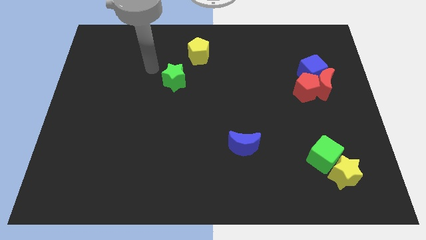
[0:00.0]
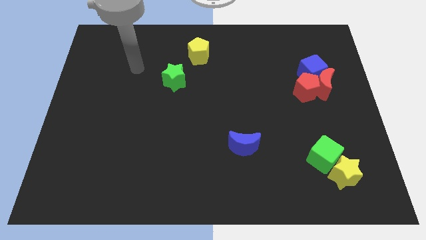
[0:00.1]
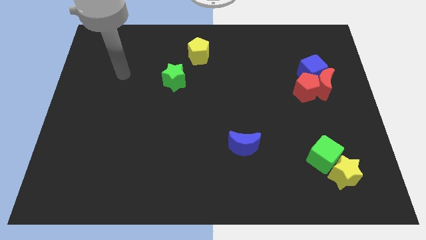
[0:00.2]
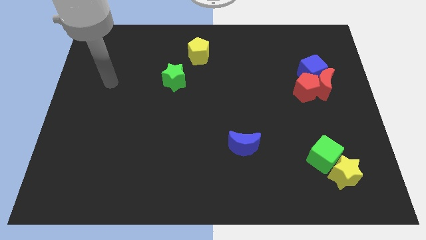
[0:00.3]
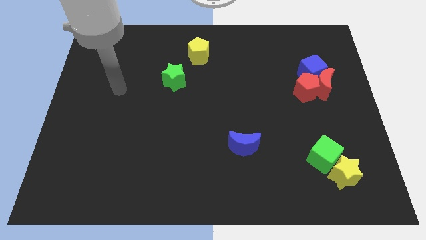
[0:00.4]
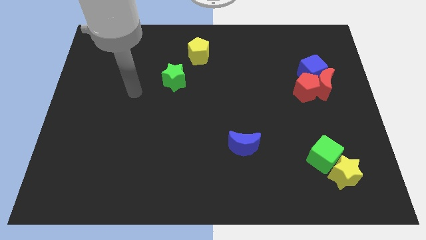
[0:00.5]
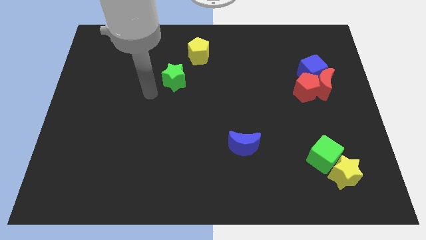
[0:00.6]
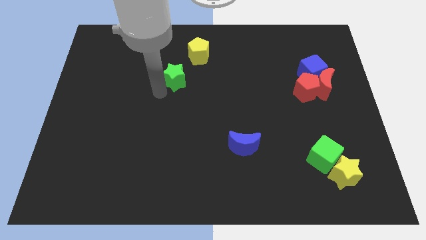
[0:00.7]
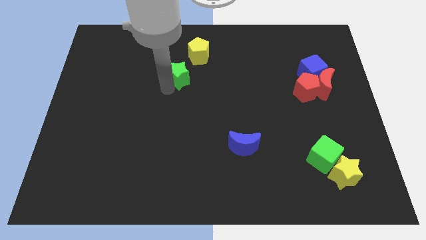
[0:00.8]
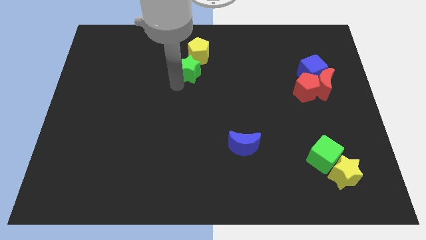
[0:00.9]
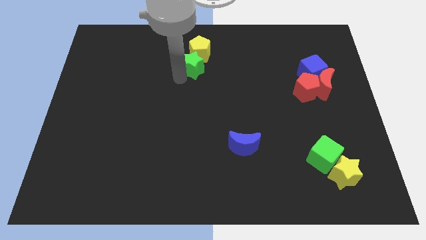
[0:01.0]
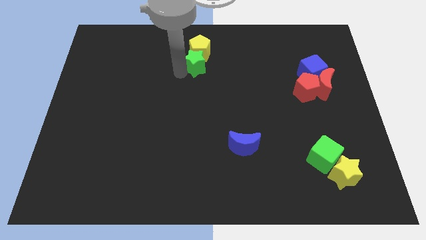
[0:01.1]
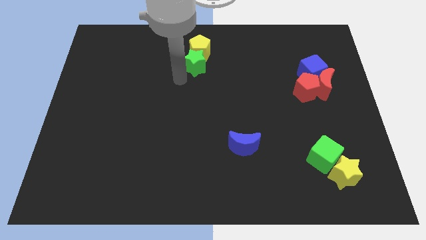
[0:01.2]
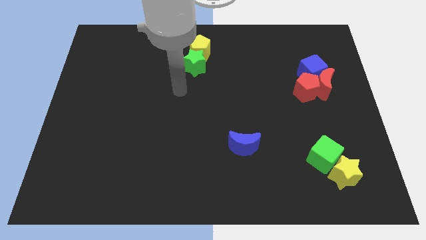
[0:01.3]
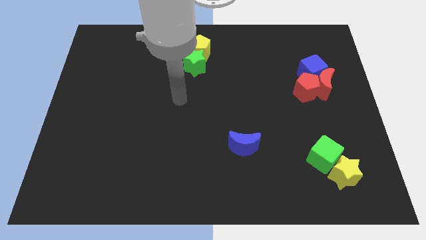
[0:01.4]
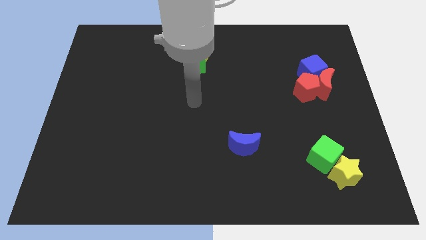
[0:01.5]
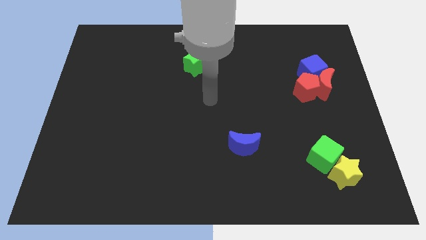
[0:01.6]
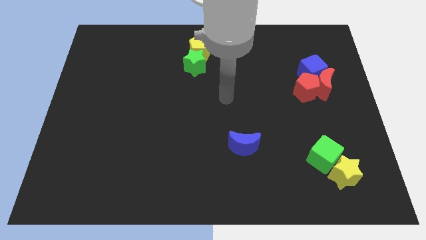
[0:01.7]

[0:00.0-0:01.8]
push the green star into the yellow pentagon

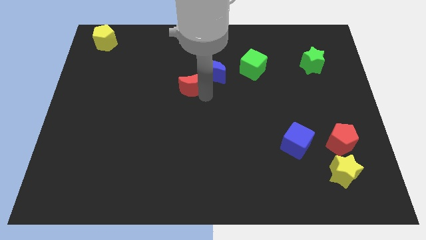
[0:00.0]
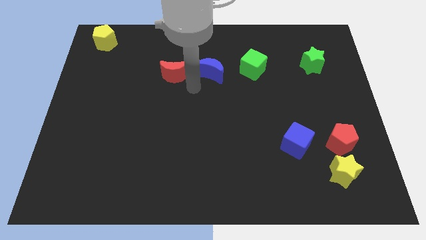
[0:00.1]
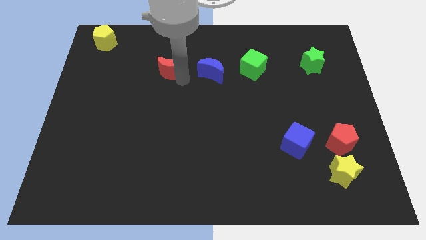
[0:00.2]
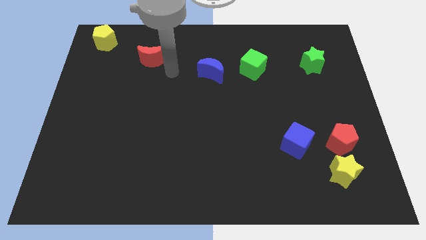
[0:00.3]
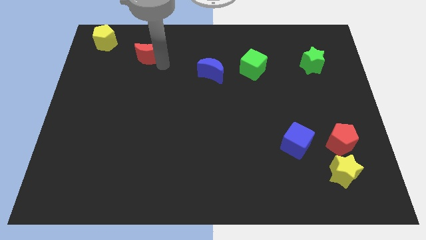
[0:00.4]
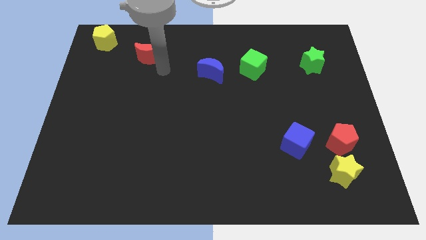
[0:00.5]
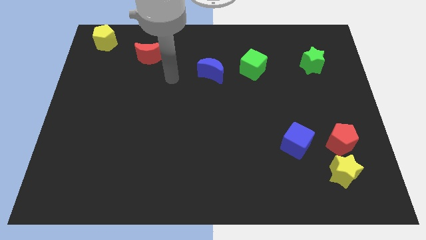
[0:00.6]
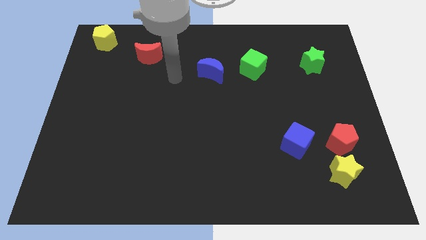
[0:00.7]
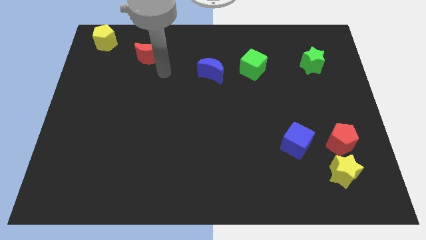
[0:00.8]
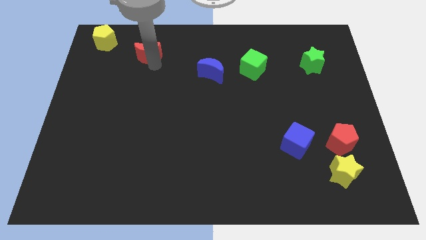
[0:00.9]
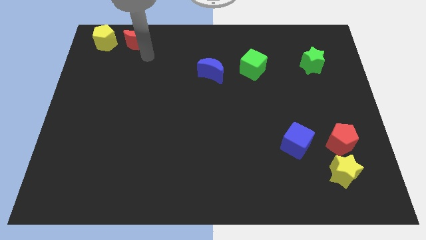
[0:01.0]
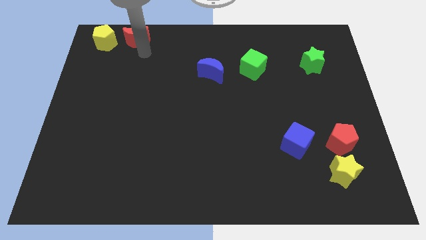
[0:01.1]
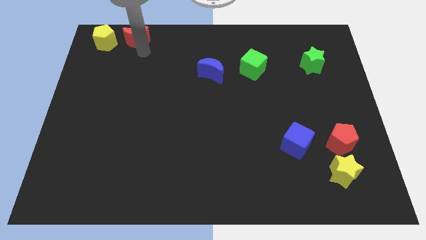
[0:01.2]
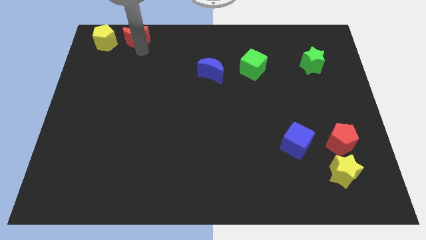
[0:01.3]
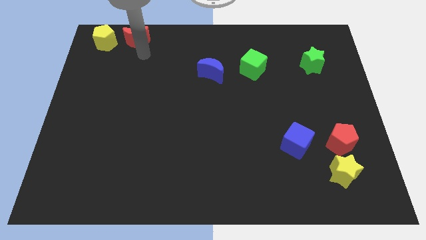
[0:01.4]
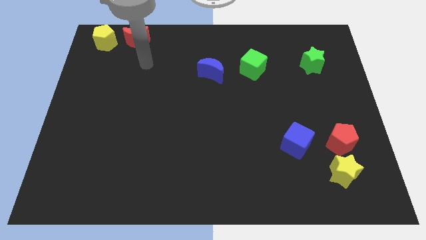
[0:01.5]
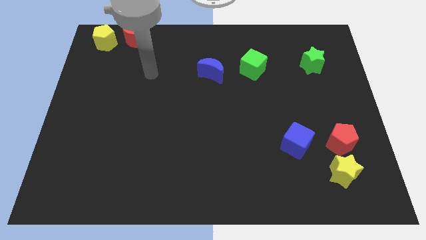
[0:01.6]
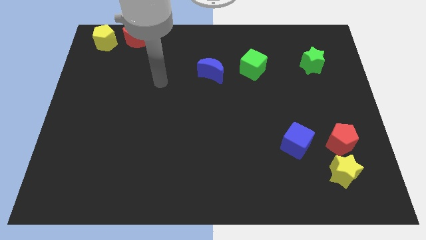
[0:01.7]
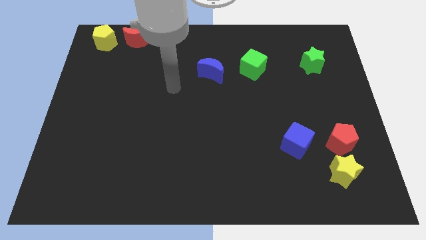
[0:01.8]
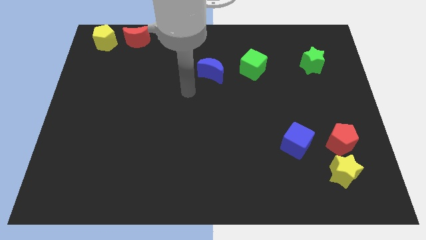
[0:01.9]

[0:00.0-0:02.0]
put the red moon right to the yellow pentagon

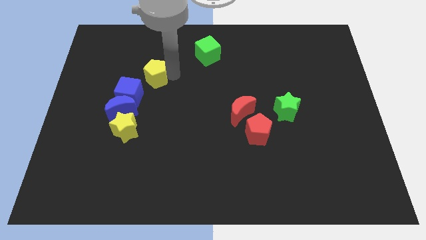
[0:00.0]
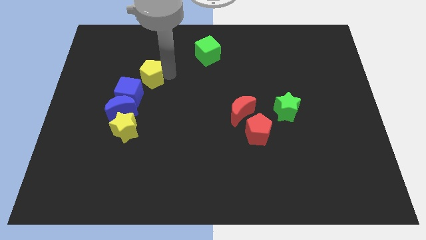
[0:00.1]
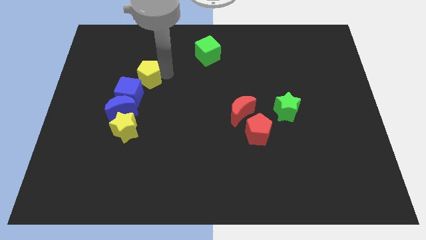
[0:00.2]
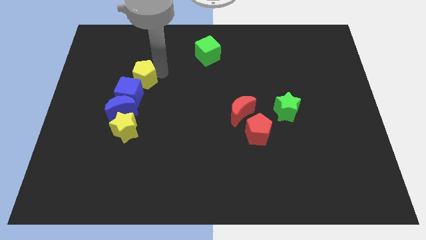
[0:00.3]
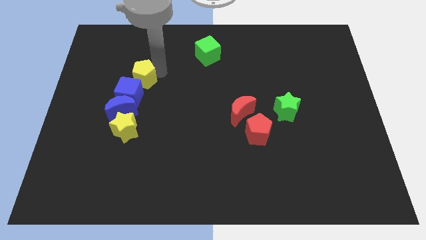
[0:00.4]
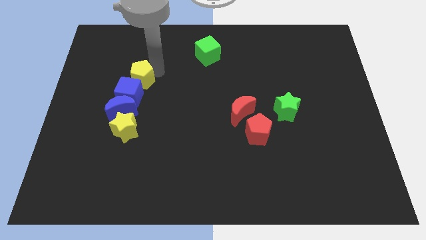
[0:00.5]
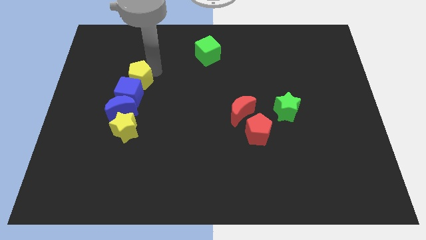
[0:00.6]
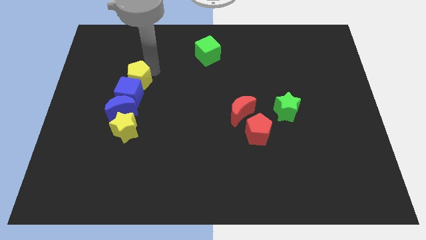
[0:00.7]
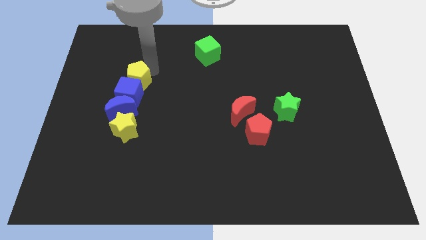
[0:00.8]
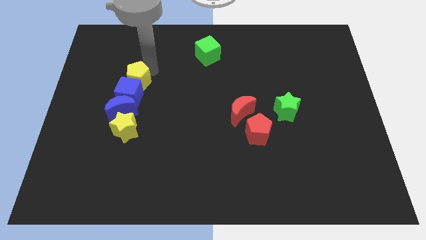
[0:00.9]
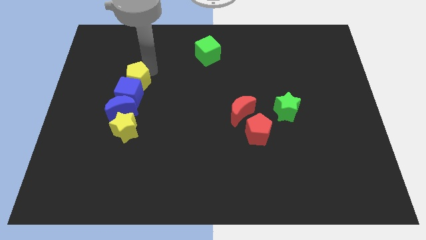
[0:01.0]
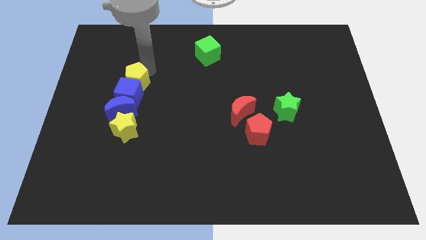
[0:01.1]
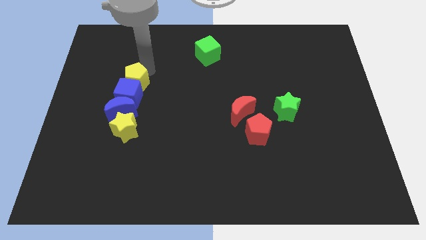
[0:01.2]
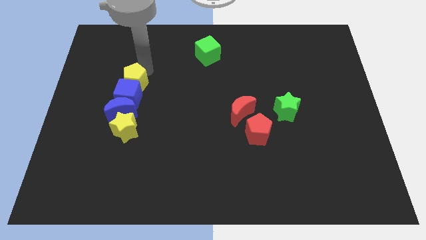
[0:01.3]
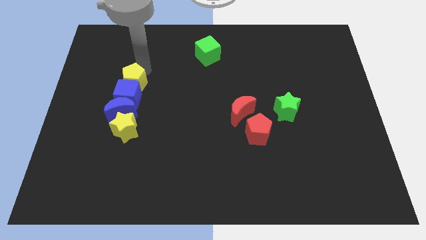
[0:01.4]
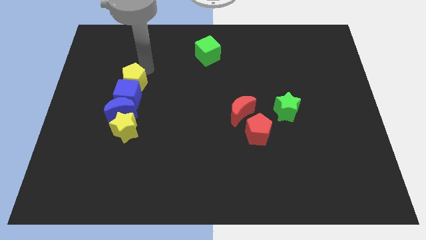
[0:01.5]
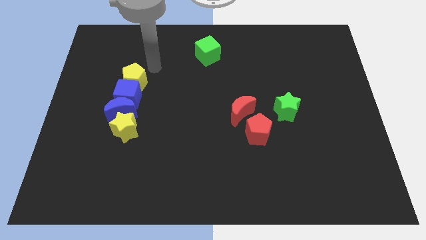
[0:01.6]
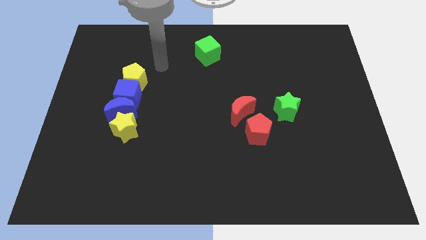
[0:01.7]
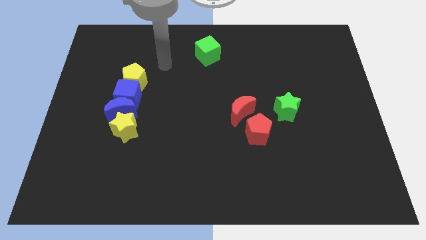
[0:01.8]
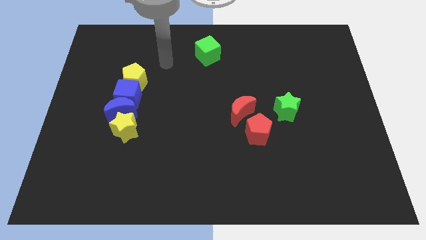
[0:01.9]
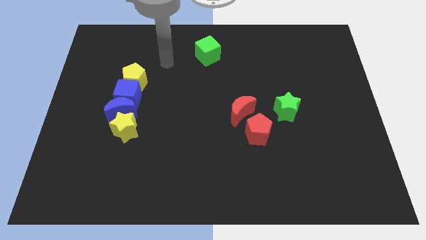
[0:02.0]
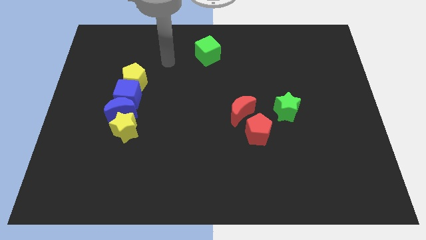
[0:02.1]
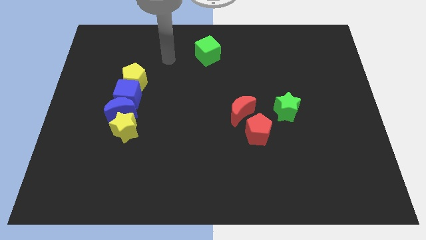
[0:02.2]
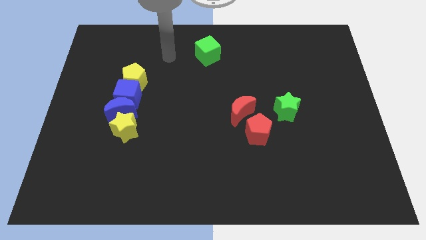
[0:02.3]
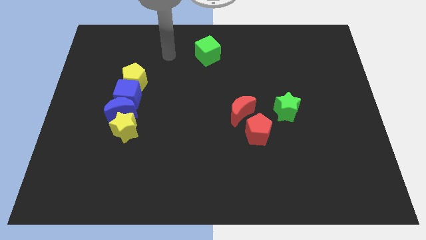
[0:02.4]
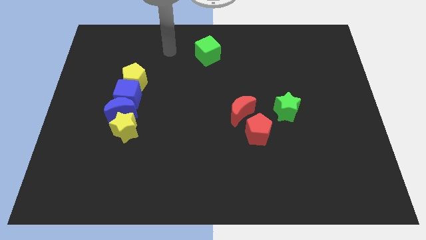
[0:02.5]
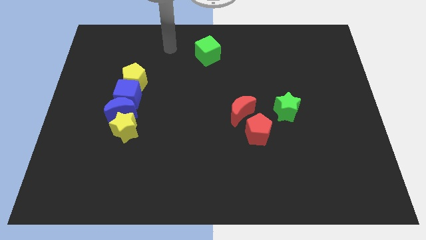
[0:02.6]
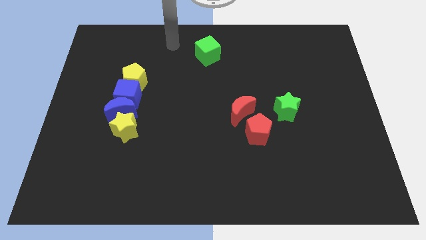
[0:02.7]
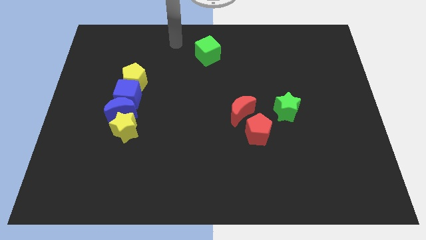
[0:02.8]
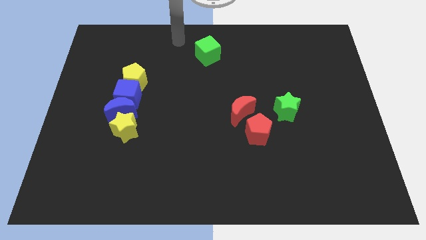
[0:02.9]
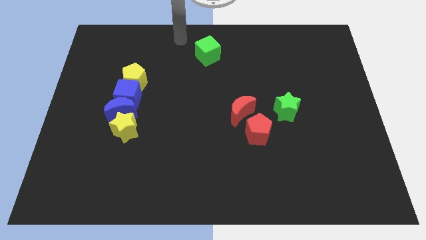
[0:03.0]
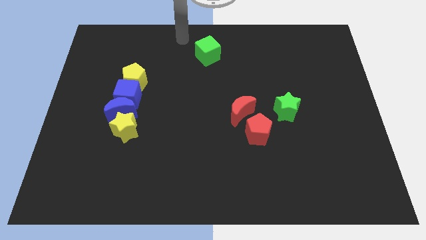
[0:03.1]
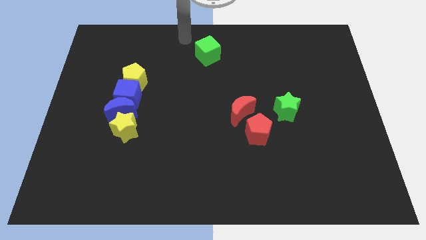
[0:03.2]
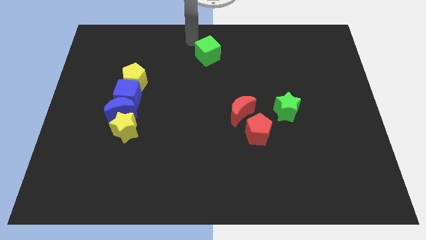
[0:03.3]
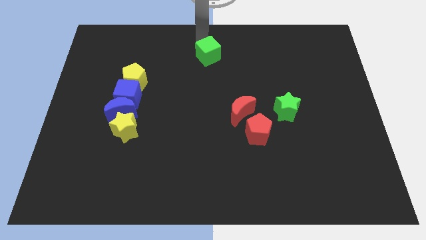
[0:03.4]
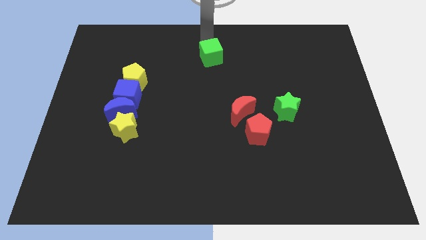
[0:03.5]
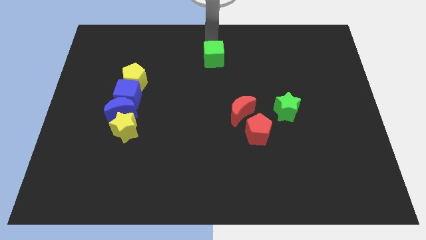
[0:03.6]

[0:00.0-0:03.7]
move your arm towards the green cube

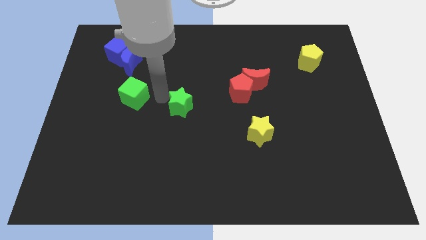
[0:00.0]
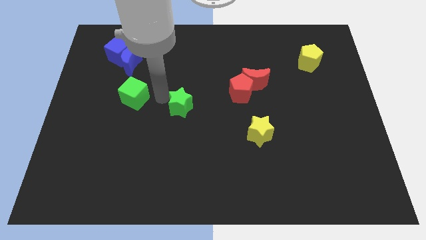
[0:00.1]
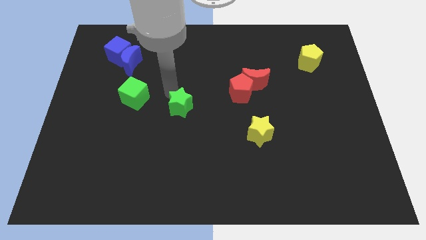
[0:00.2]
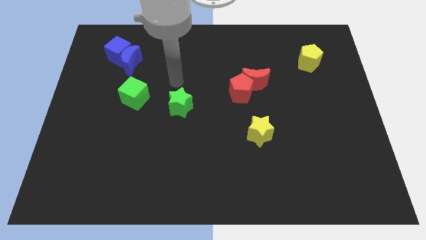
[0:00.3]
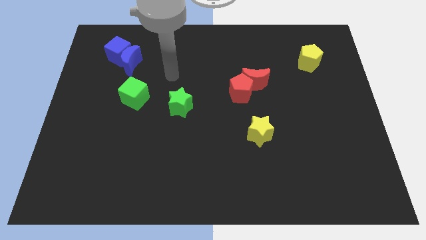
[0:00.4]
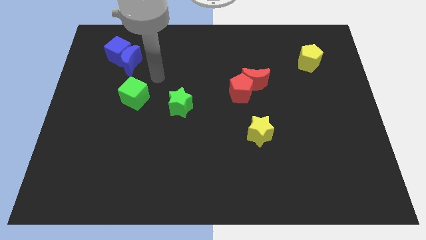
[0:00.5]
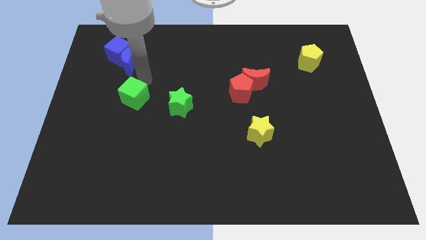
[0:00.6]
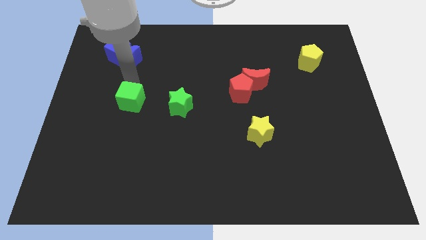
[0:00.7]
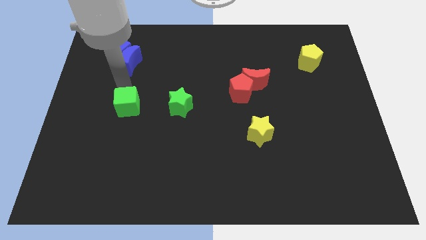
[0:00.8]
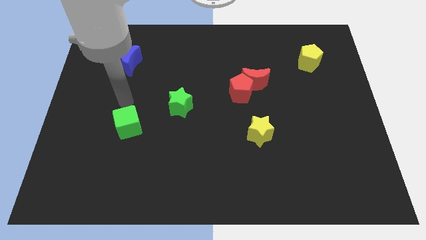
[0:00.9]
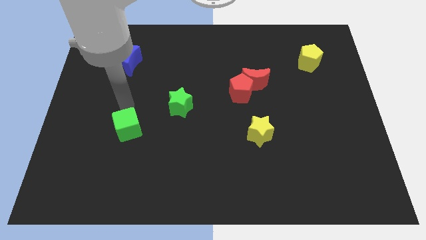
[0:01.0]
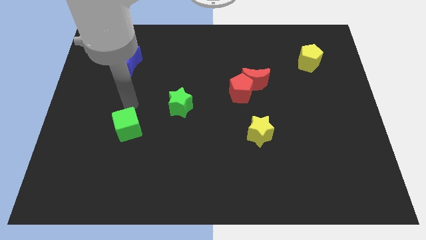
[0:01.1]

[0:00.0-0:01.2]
push green star slightly towards down

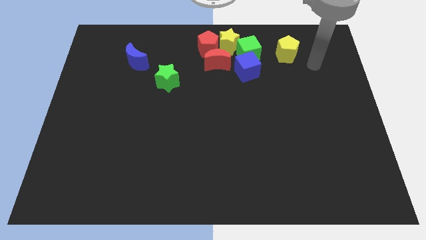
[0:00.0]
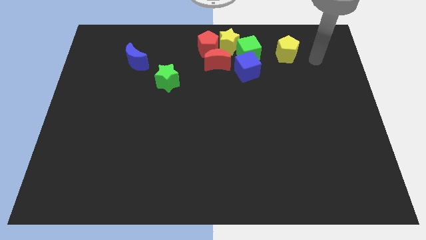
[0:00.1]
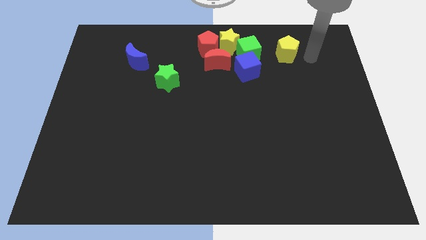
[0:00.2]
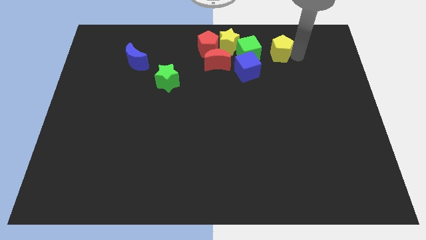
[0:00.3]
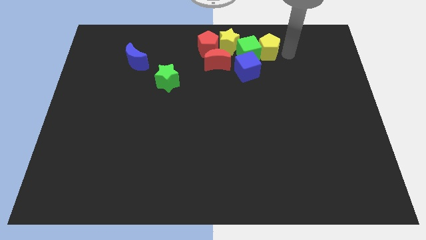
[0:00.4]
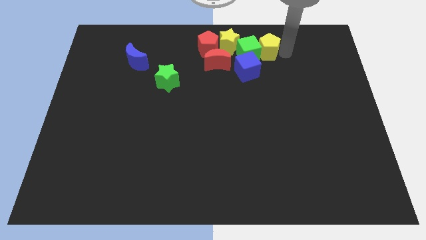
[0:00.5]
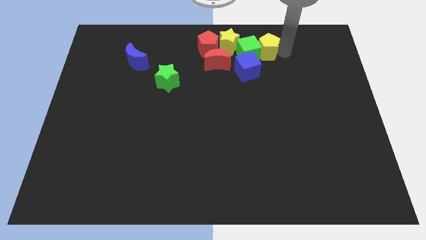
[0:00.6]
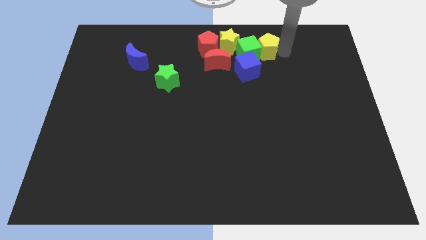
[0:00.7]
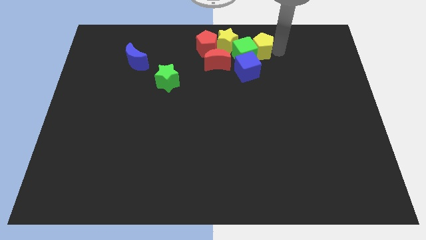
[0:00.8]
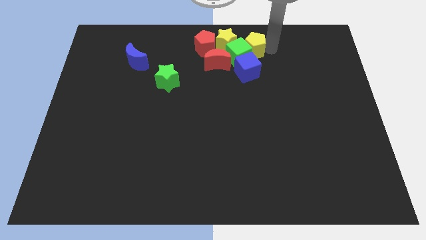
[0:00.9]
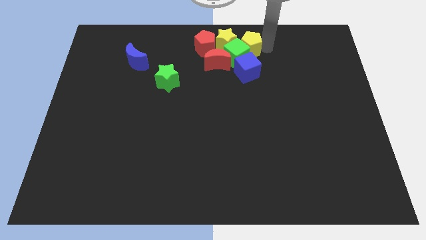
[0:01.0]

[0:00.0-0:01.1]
push the yellow pentagon into the green cube
